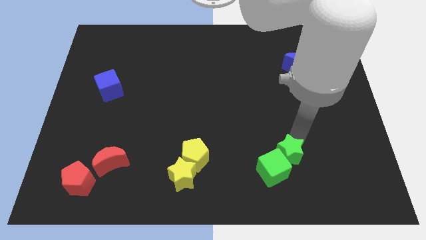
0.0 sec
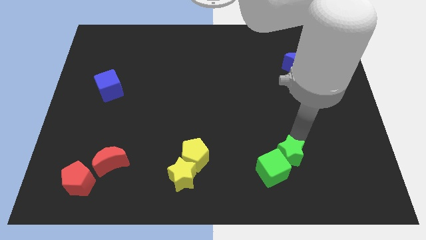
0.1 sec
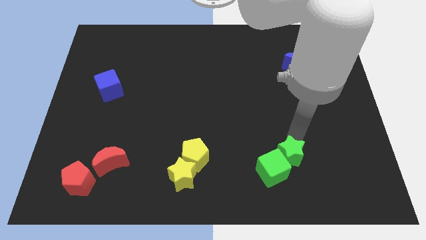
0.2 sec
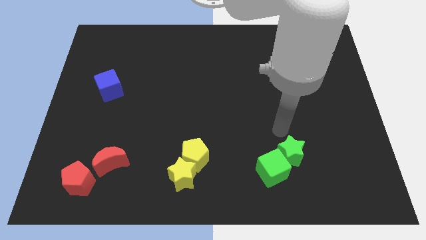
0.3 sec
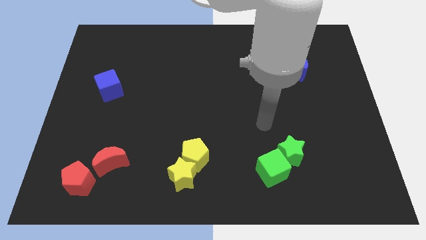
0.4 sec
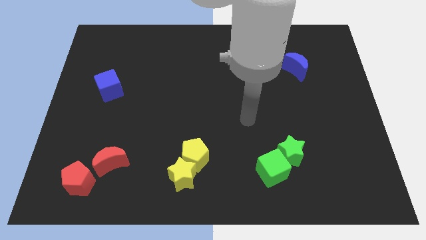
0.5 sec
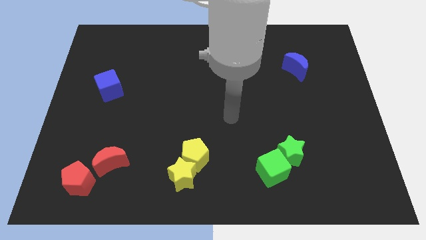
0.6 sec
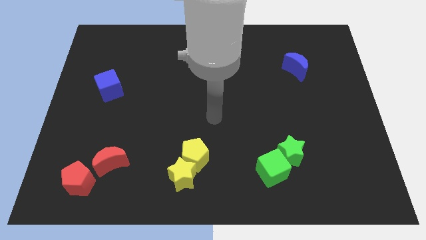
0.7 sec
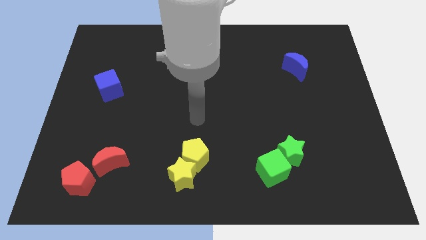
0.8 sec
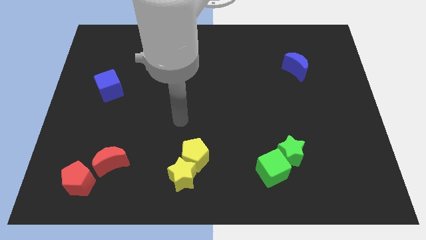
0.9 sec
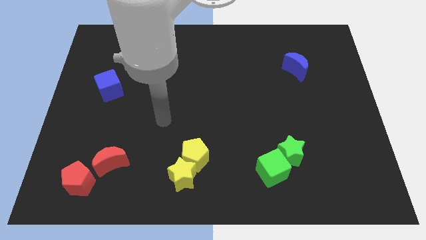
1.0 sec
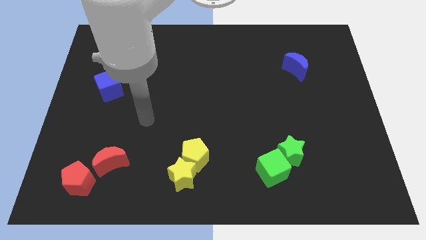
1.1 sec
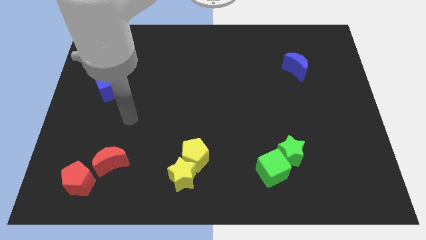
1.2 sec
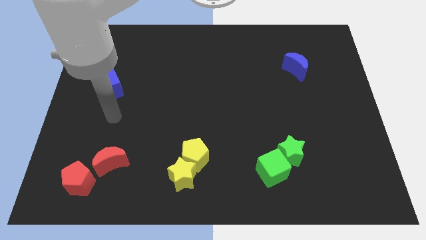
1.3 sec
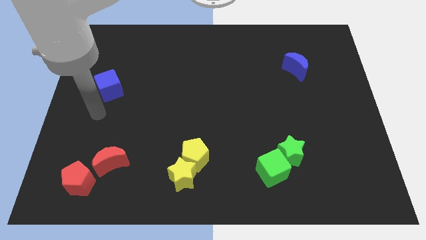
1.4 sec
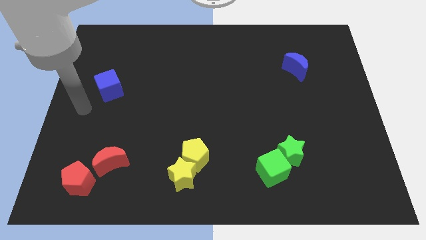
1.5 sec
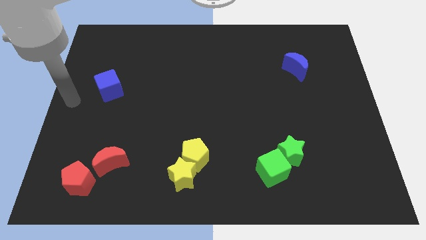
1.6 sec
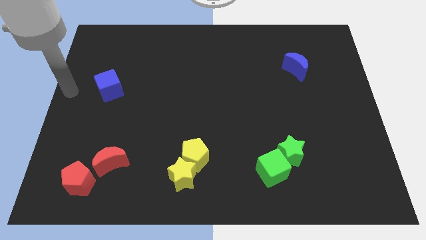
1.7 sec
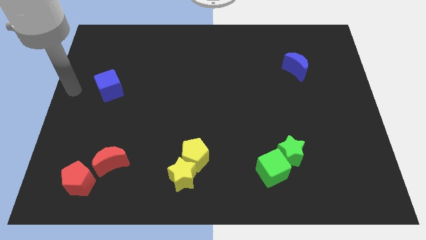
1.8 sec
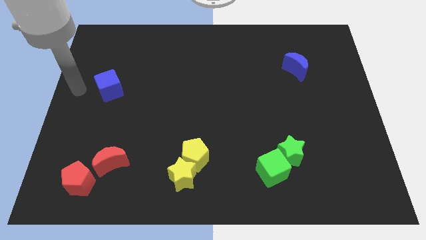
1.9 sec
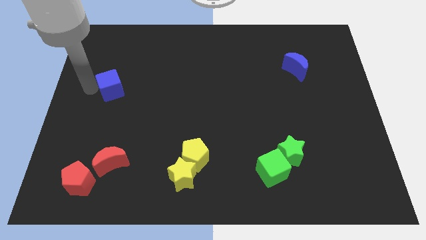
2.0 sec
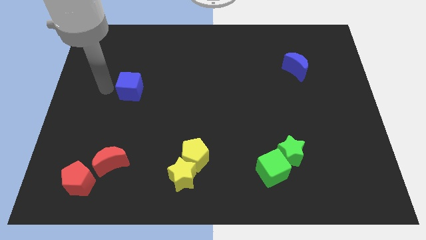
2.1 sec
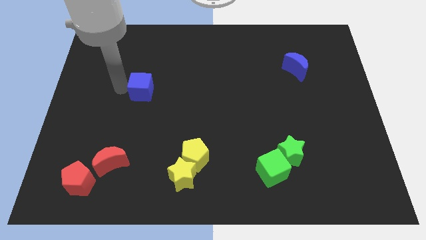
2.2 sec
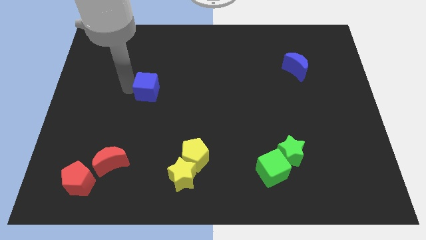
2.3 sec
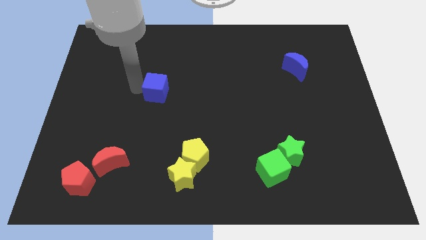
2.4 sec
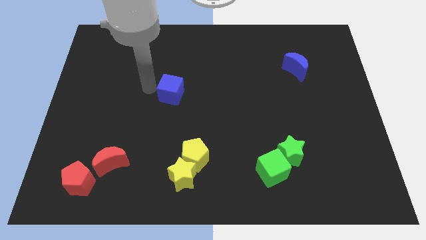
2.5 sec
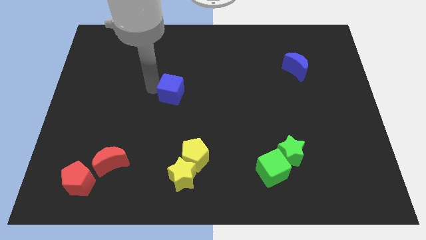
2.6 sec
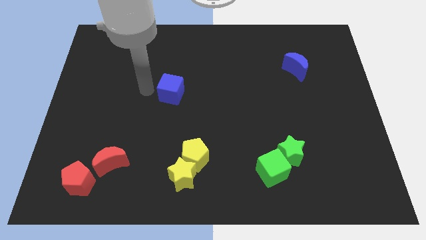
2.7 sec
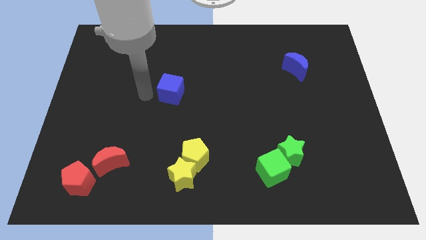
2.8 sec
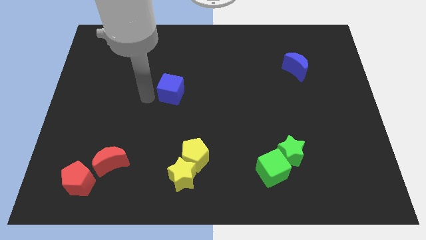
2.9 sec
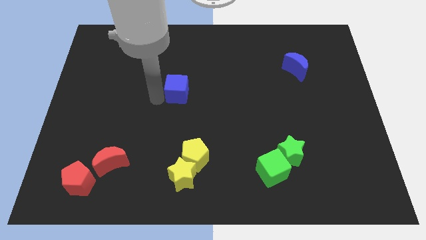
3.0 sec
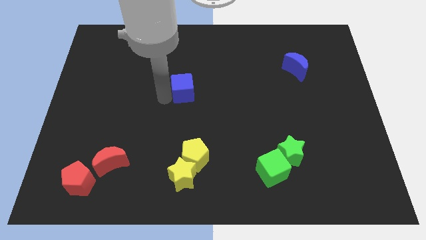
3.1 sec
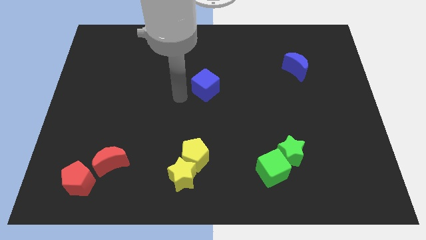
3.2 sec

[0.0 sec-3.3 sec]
slide the blue cube above the yellow pentagon

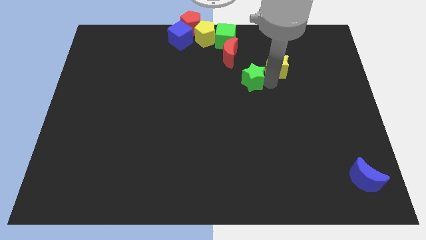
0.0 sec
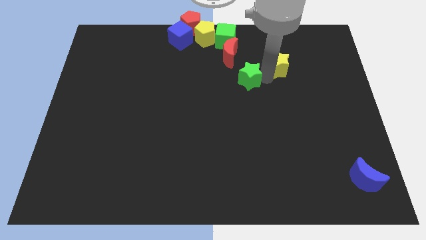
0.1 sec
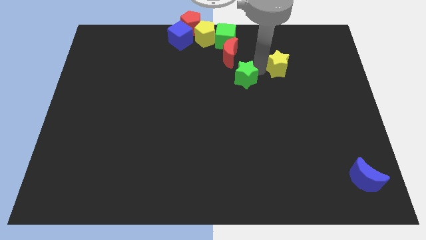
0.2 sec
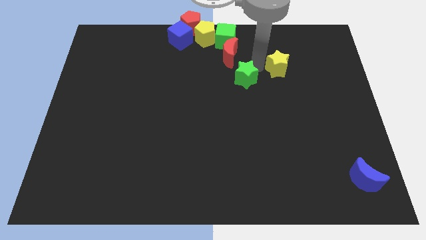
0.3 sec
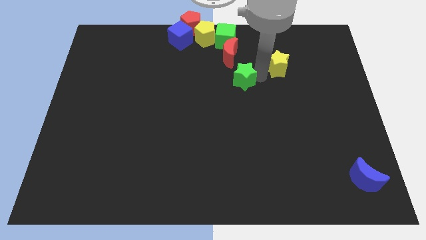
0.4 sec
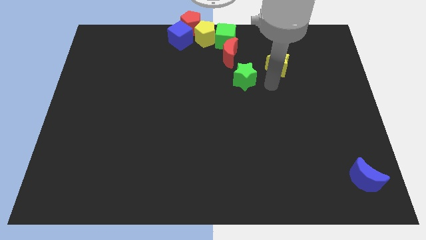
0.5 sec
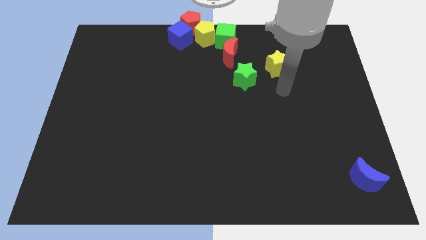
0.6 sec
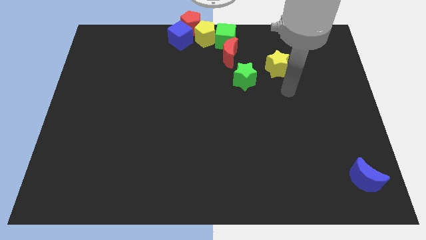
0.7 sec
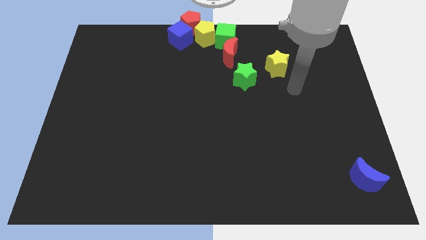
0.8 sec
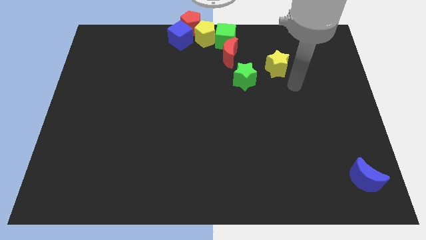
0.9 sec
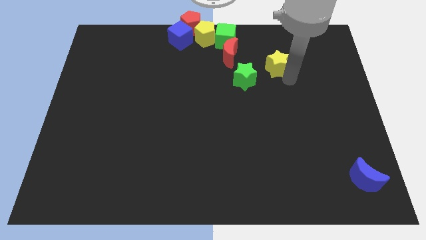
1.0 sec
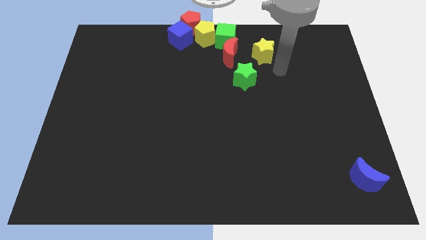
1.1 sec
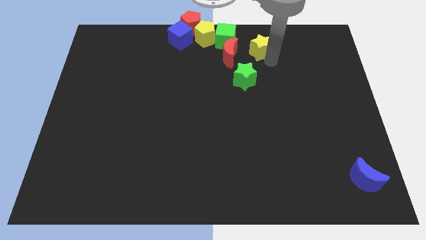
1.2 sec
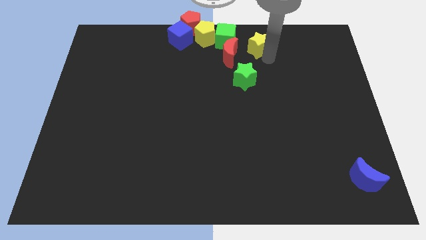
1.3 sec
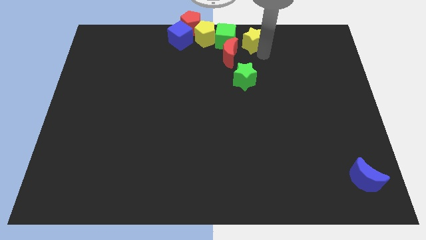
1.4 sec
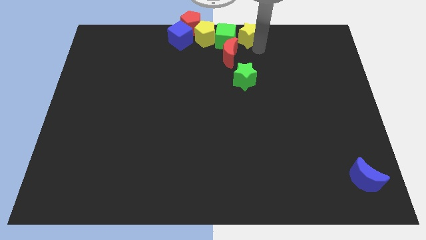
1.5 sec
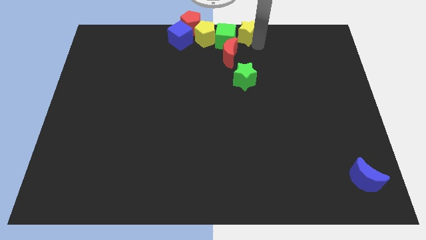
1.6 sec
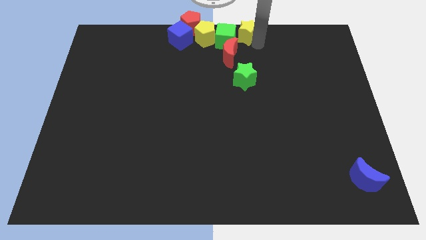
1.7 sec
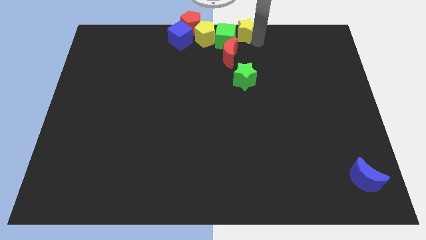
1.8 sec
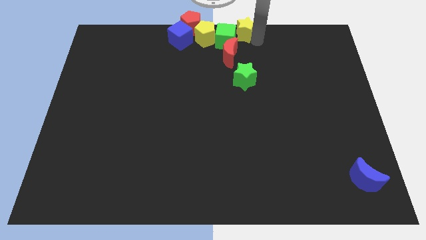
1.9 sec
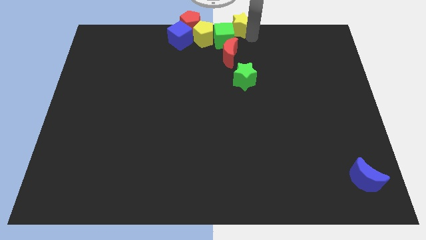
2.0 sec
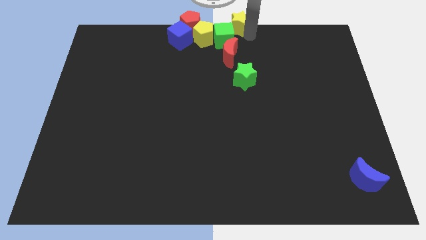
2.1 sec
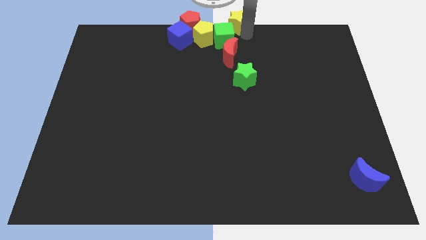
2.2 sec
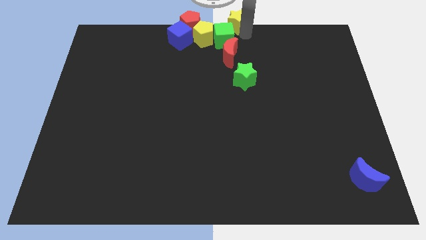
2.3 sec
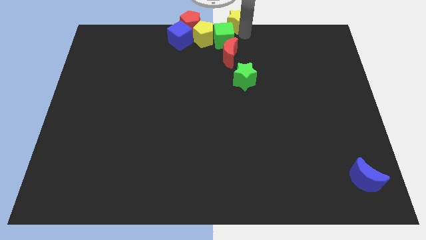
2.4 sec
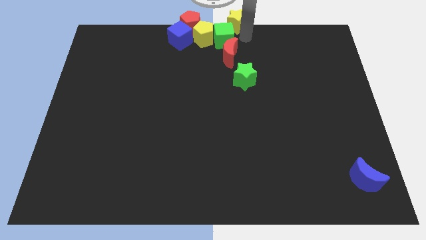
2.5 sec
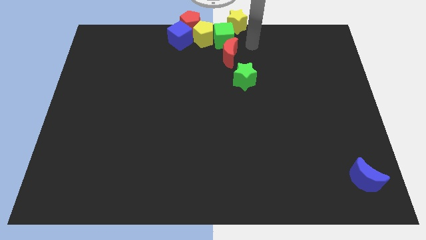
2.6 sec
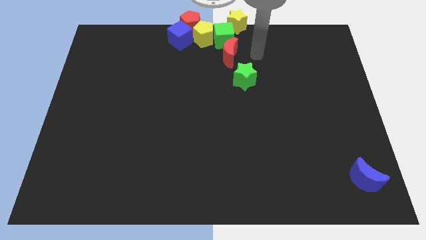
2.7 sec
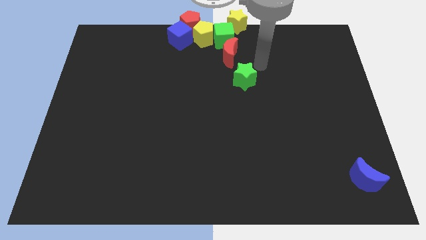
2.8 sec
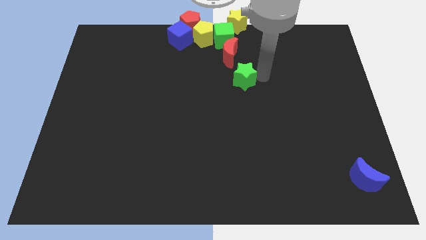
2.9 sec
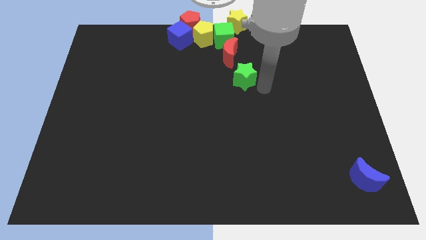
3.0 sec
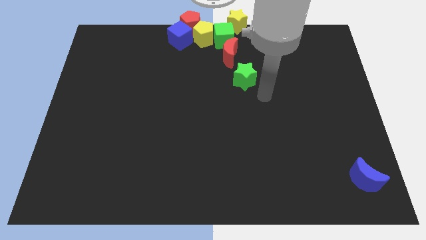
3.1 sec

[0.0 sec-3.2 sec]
move the yellow star towards the top center

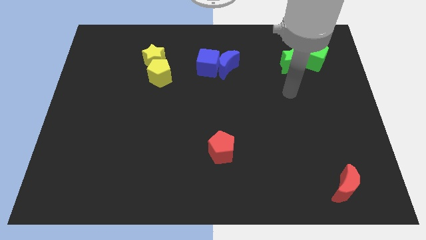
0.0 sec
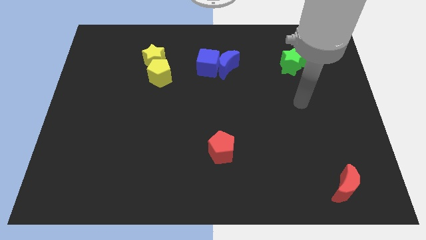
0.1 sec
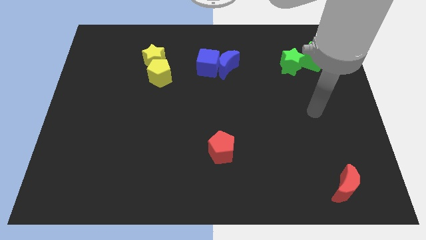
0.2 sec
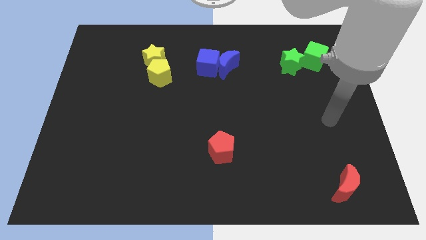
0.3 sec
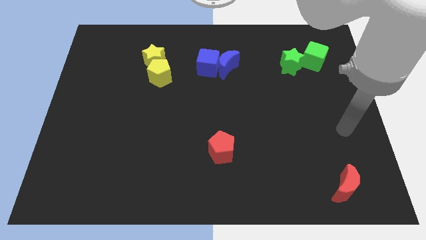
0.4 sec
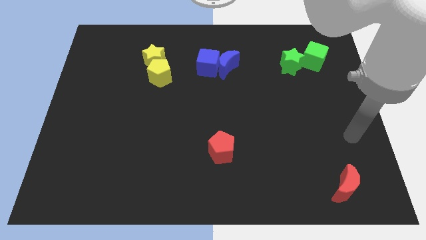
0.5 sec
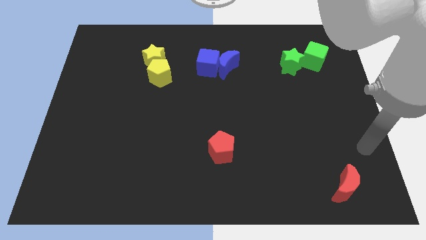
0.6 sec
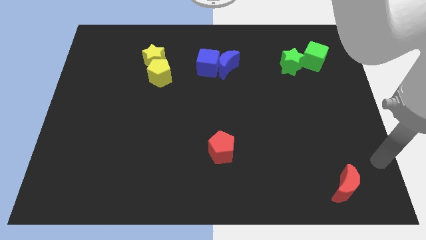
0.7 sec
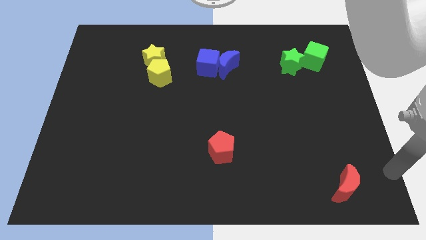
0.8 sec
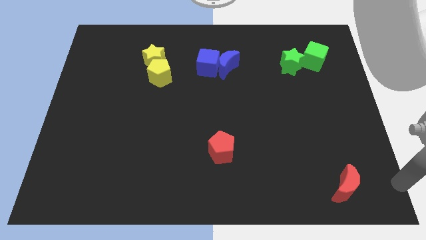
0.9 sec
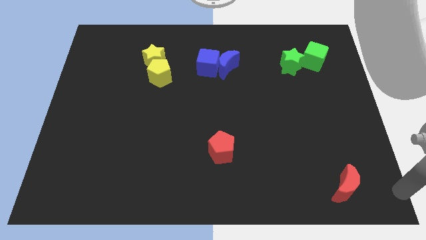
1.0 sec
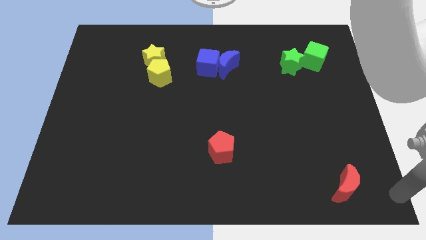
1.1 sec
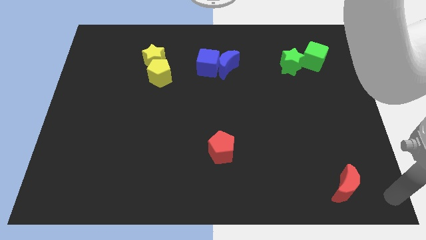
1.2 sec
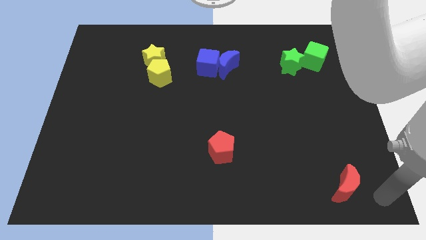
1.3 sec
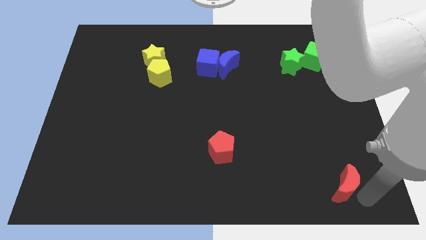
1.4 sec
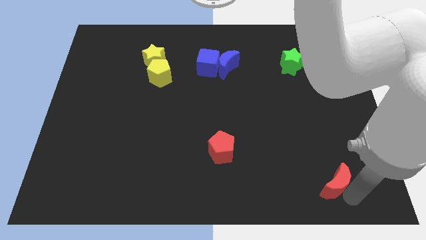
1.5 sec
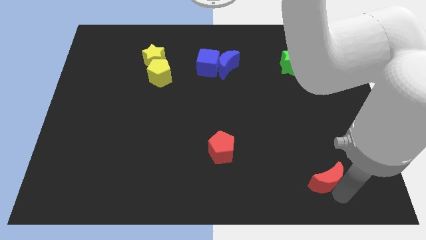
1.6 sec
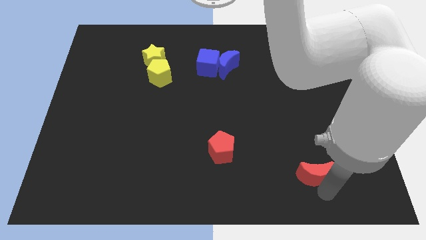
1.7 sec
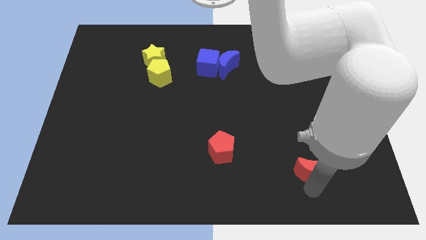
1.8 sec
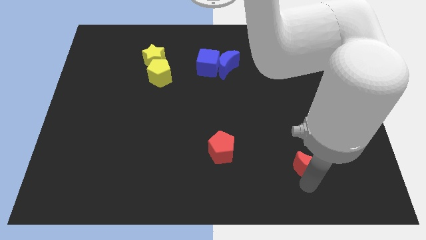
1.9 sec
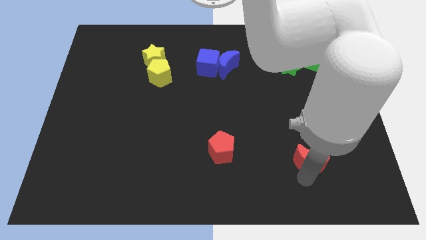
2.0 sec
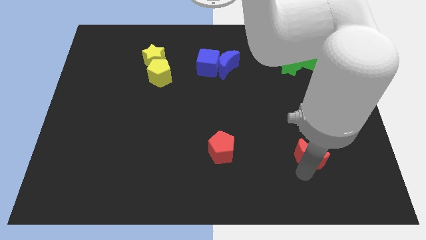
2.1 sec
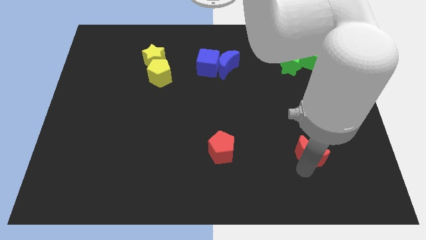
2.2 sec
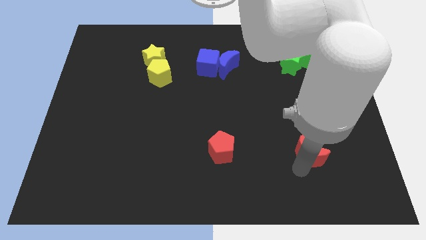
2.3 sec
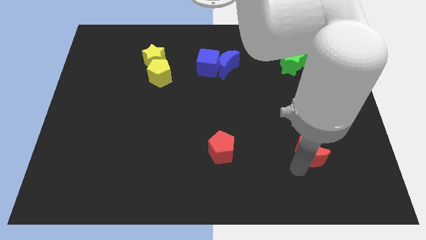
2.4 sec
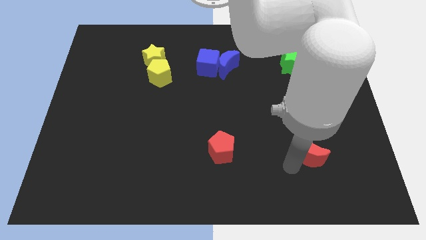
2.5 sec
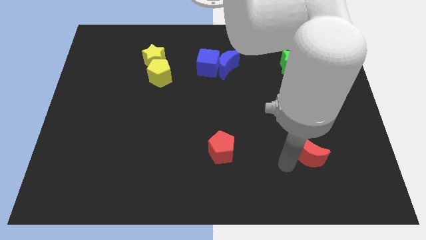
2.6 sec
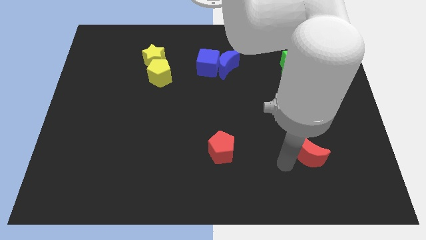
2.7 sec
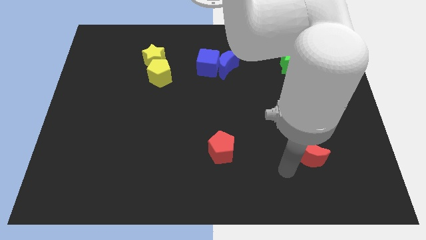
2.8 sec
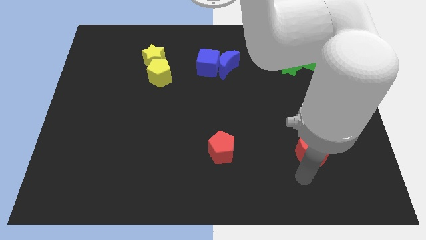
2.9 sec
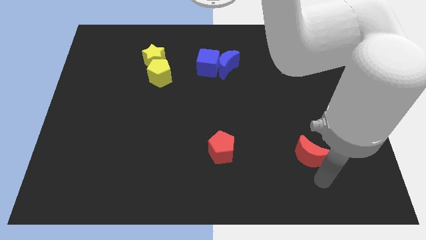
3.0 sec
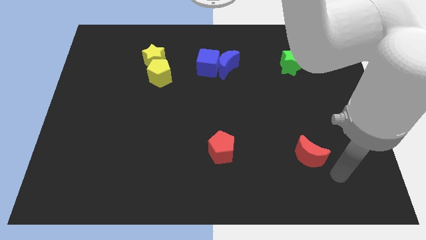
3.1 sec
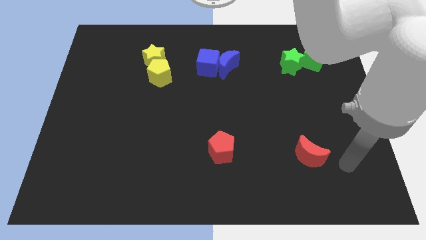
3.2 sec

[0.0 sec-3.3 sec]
place the red moon right to the red pentagon
